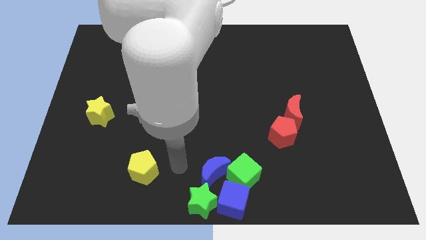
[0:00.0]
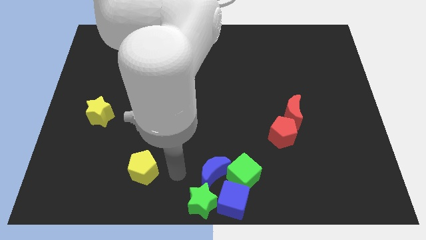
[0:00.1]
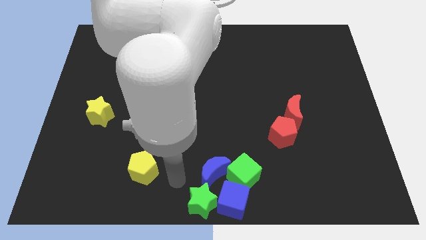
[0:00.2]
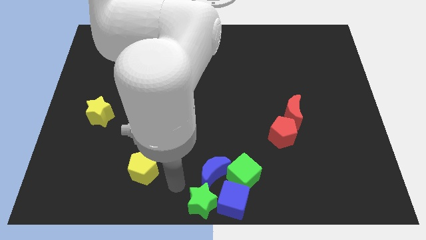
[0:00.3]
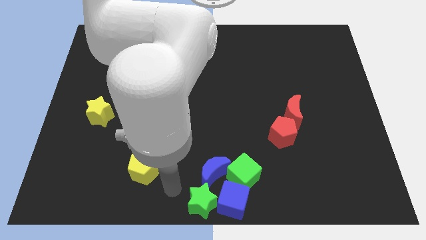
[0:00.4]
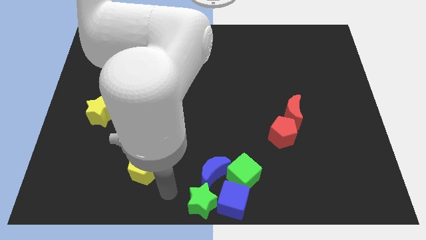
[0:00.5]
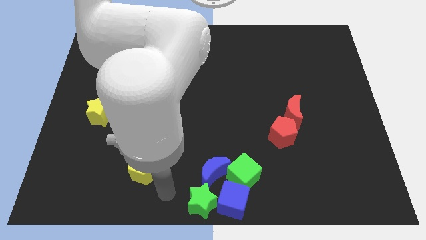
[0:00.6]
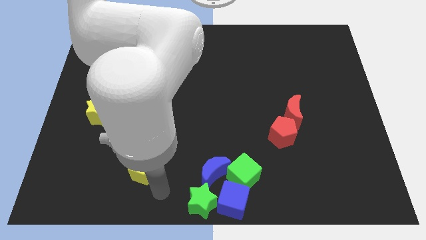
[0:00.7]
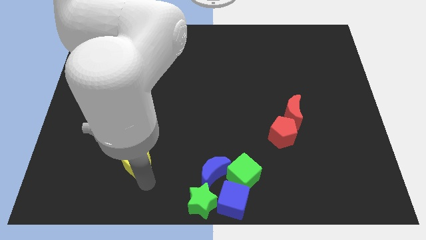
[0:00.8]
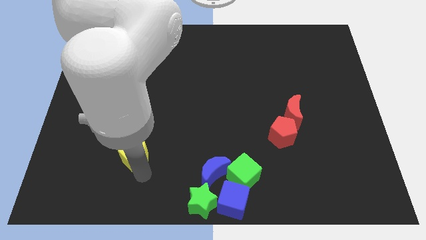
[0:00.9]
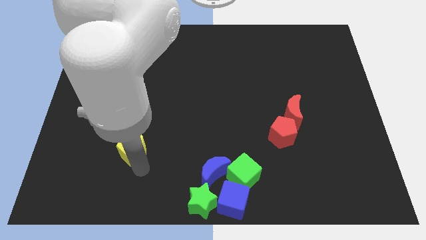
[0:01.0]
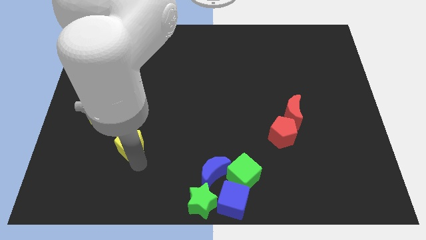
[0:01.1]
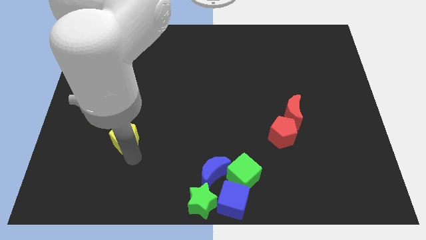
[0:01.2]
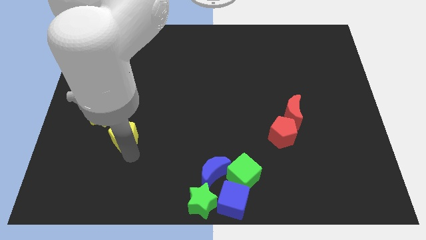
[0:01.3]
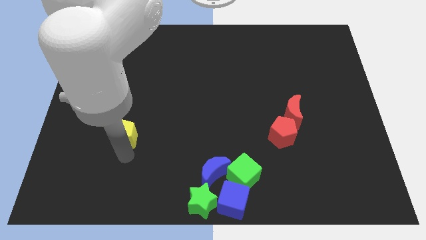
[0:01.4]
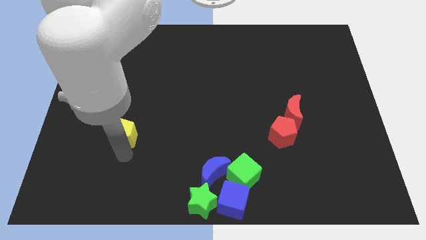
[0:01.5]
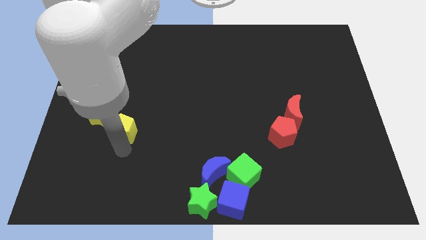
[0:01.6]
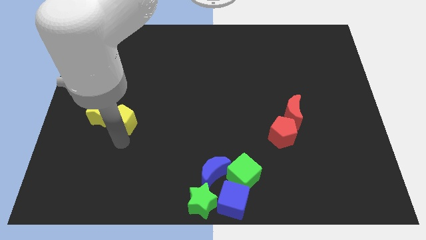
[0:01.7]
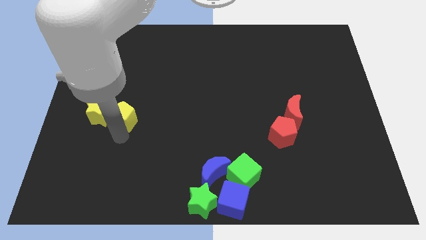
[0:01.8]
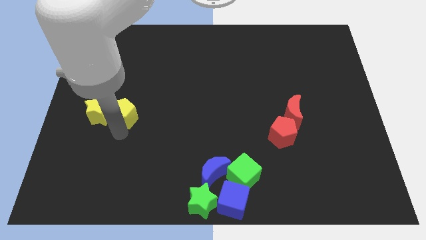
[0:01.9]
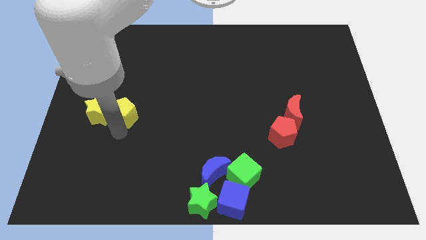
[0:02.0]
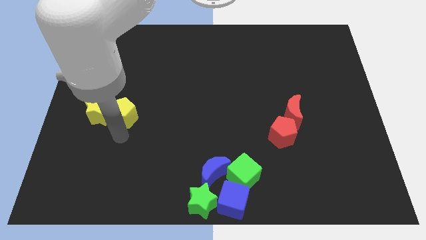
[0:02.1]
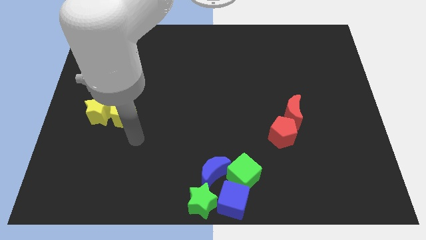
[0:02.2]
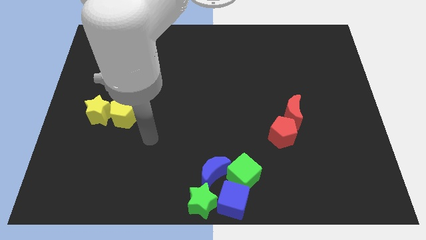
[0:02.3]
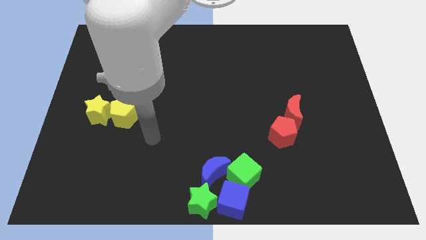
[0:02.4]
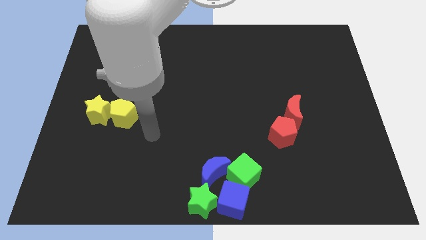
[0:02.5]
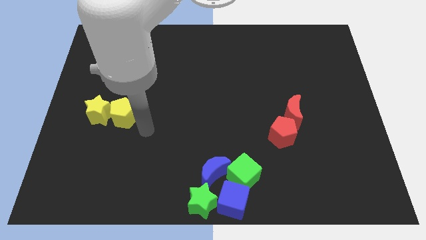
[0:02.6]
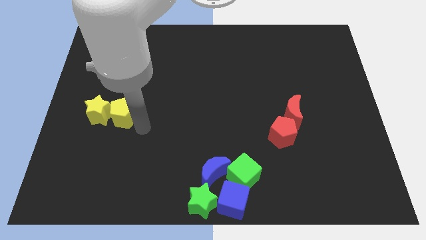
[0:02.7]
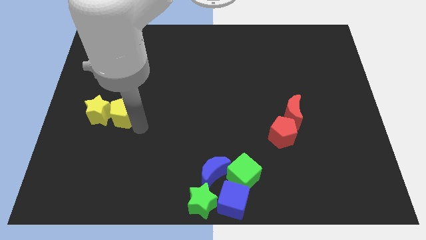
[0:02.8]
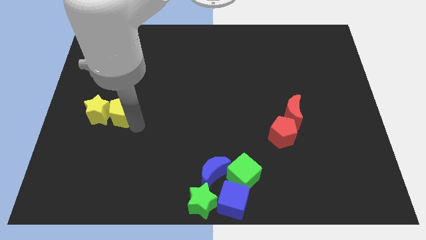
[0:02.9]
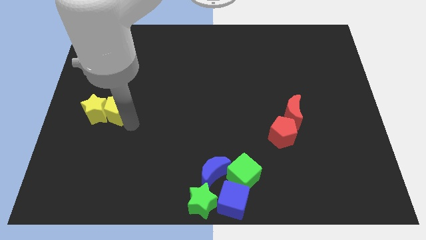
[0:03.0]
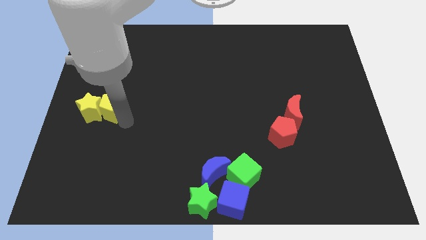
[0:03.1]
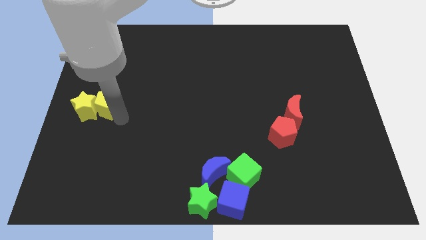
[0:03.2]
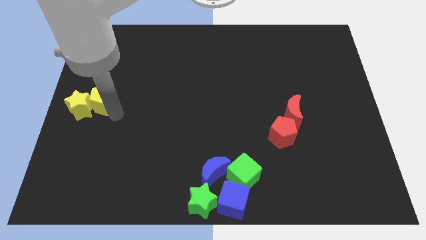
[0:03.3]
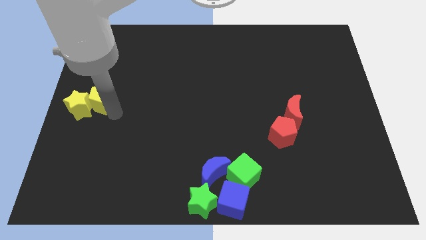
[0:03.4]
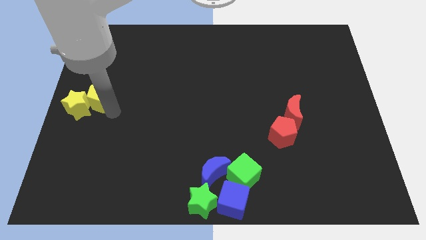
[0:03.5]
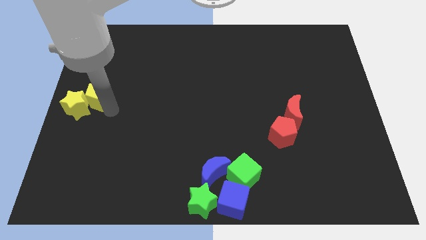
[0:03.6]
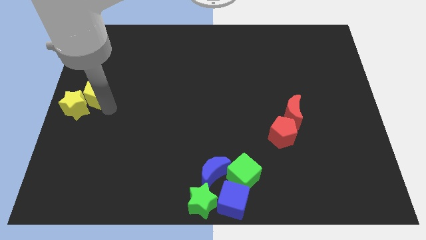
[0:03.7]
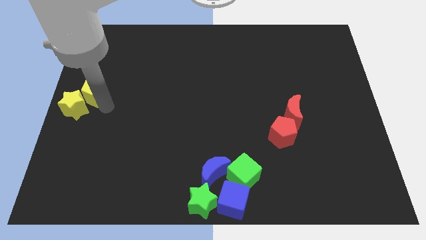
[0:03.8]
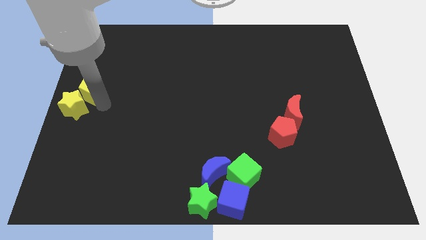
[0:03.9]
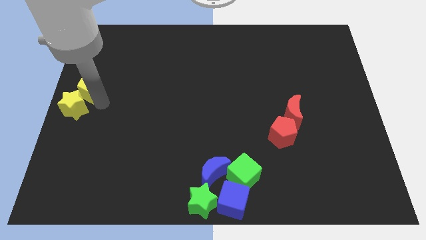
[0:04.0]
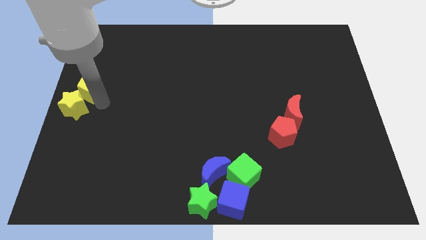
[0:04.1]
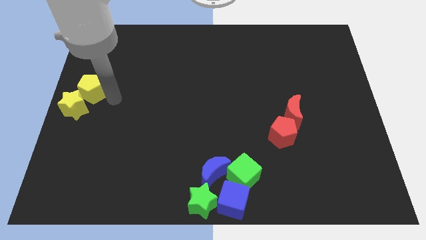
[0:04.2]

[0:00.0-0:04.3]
push the yellow pentagon into the yellow star

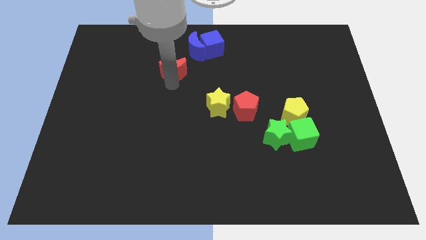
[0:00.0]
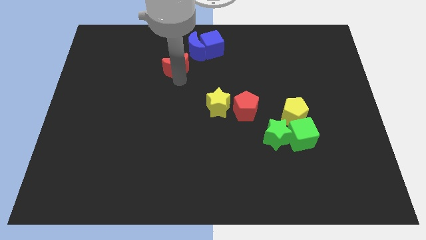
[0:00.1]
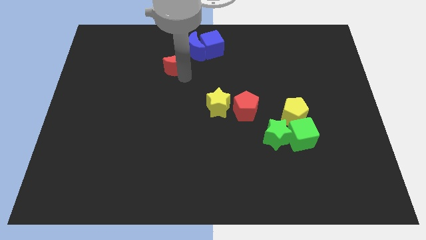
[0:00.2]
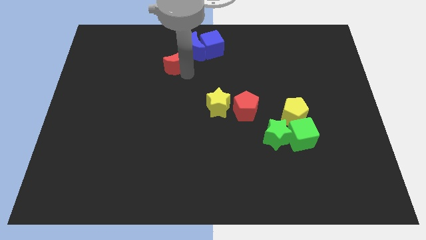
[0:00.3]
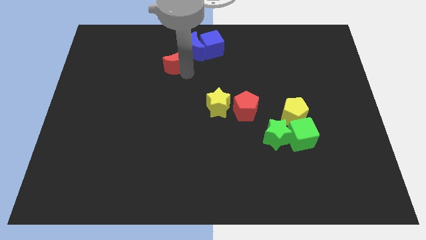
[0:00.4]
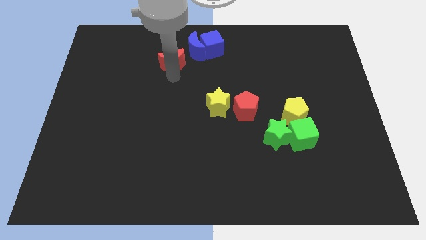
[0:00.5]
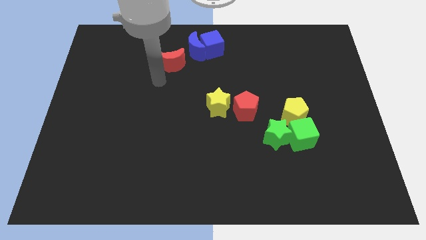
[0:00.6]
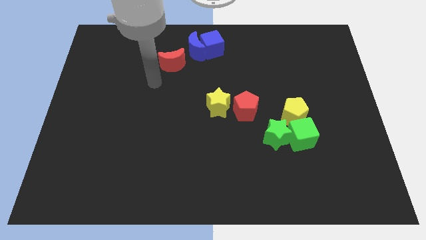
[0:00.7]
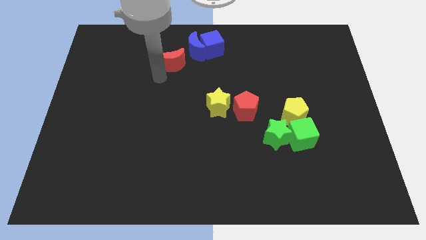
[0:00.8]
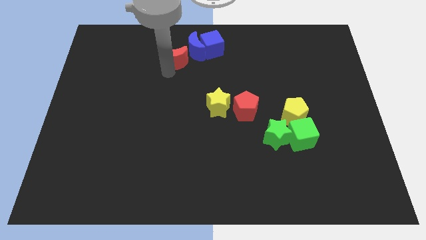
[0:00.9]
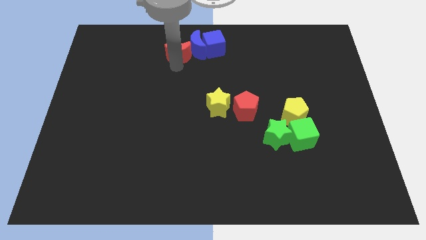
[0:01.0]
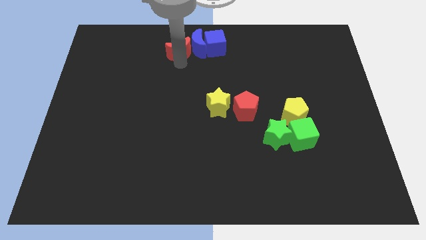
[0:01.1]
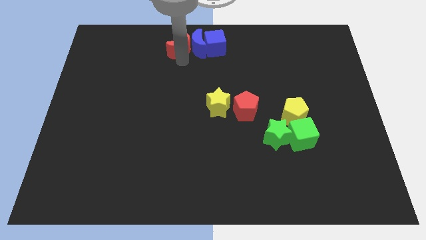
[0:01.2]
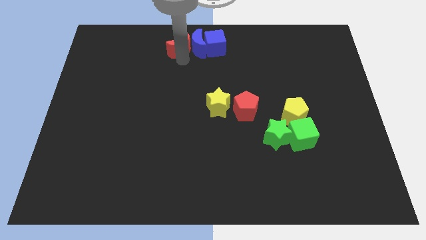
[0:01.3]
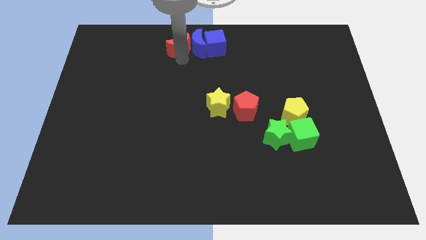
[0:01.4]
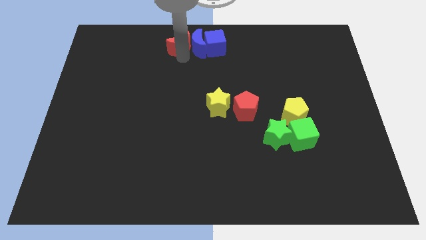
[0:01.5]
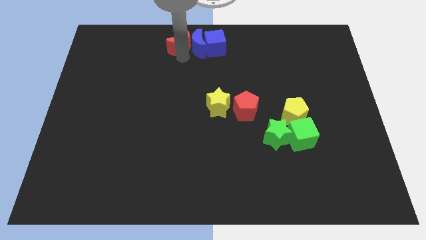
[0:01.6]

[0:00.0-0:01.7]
place the red moon to the left of the blue moon

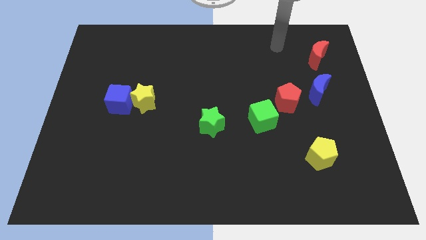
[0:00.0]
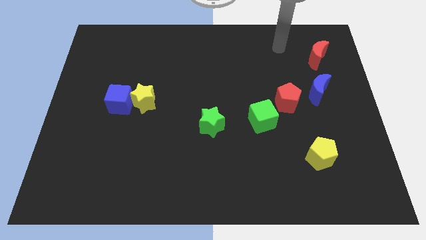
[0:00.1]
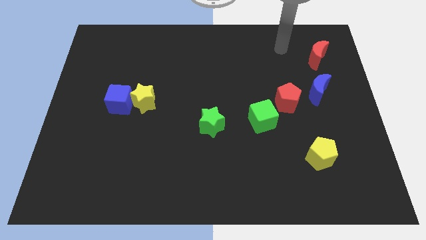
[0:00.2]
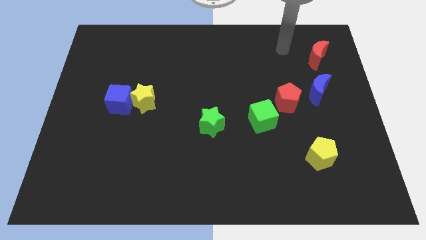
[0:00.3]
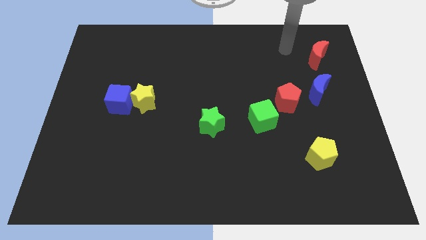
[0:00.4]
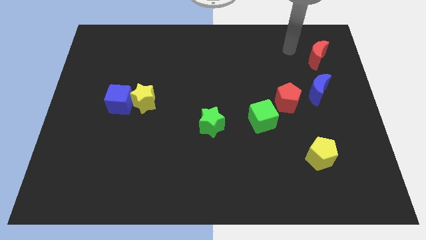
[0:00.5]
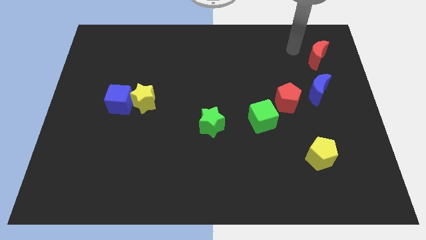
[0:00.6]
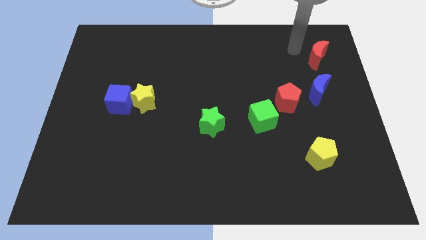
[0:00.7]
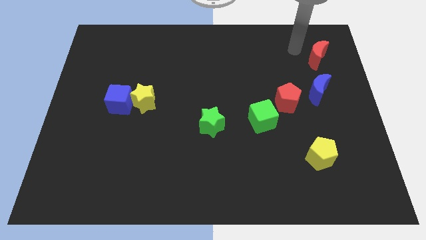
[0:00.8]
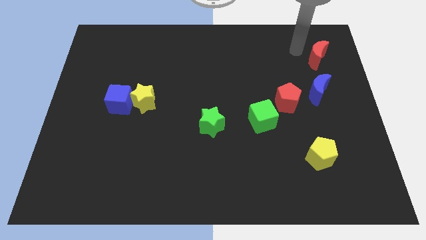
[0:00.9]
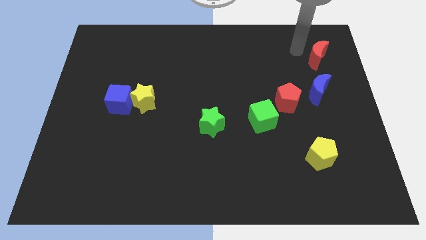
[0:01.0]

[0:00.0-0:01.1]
slide your arm to the left of red moon

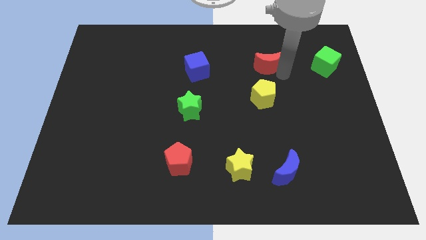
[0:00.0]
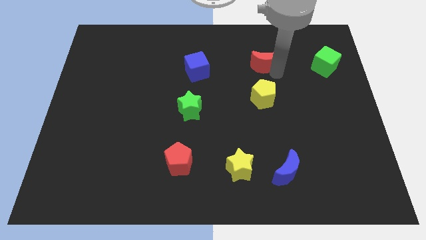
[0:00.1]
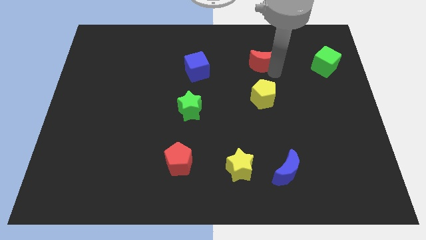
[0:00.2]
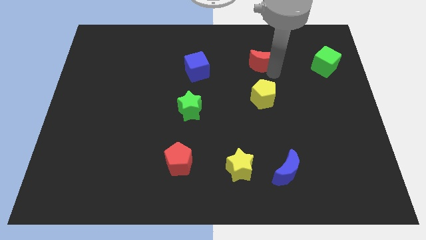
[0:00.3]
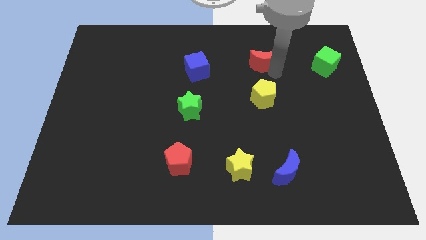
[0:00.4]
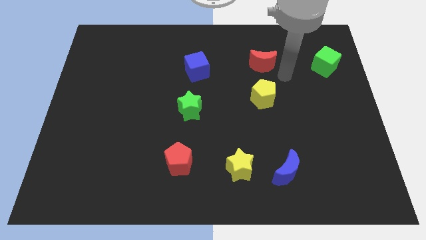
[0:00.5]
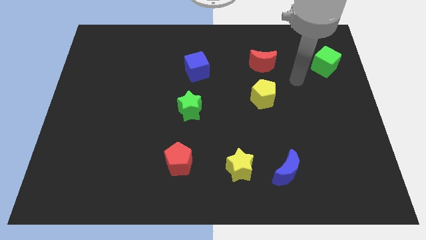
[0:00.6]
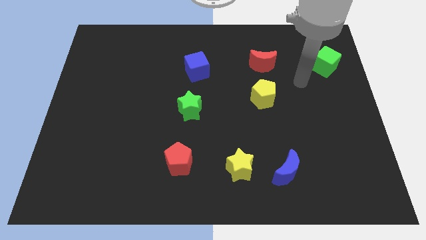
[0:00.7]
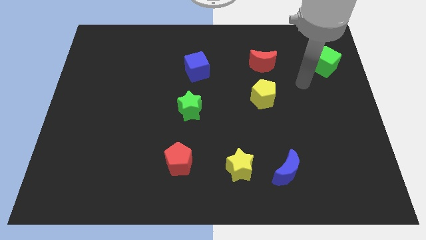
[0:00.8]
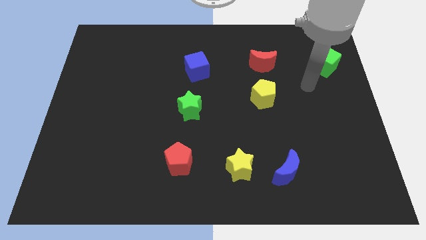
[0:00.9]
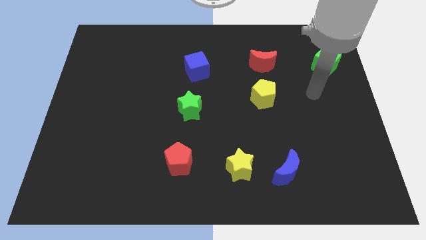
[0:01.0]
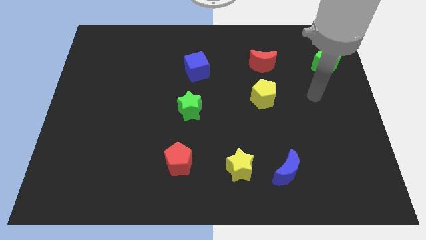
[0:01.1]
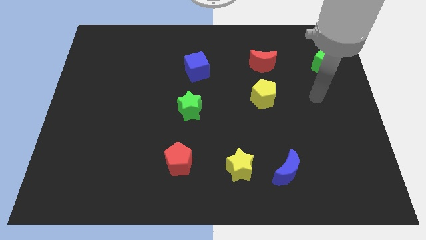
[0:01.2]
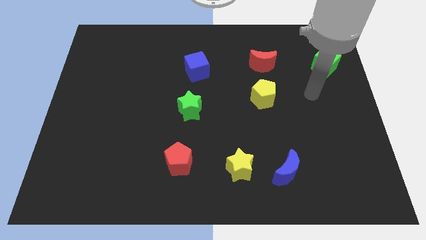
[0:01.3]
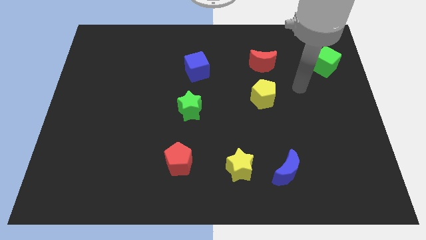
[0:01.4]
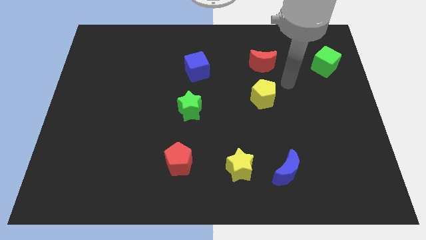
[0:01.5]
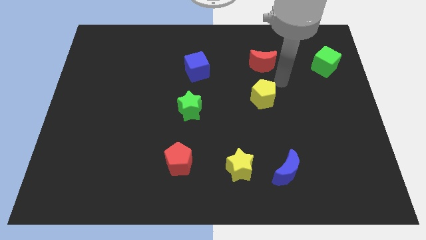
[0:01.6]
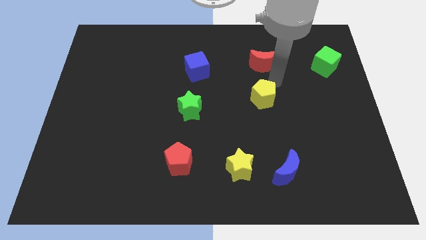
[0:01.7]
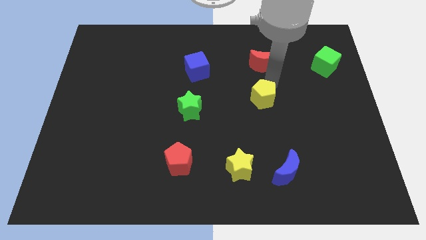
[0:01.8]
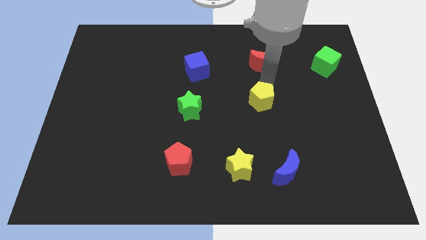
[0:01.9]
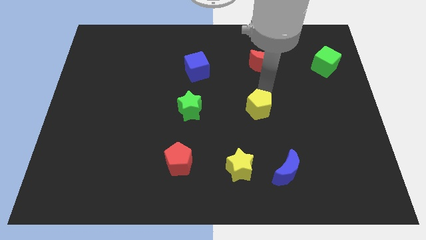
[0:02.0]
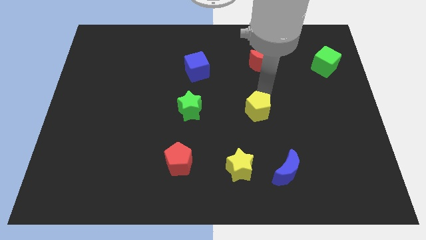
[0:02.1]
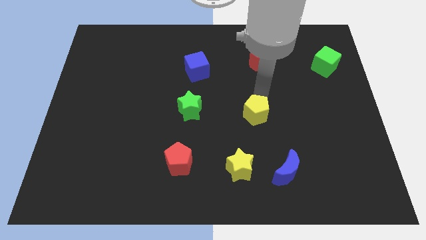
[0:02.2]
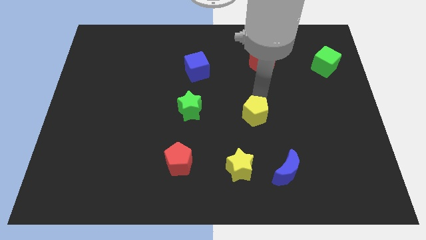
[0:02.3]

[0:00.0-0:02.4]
place the yellow pentagon diagonally in between the red pentagon and green cube
